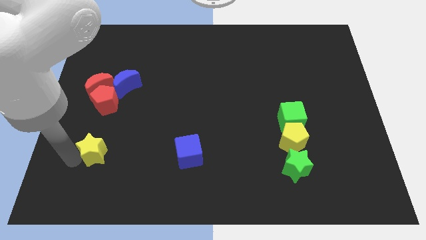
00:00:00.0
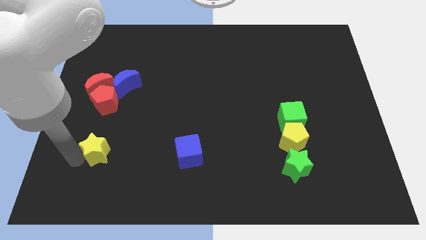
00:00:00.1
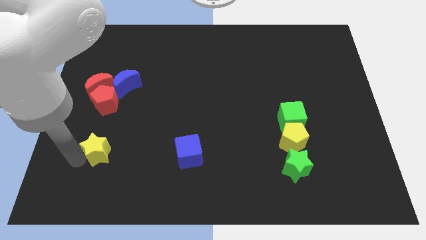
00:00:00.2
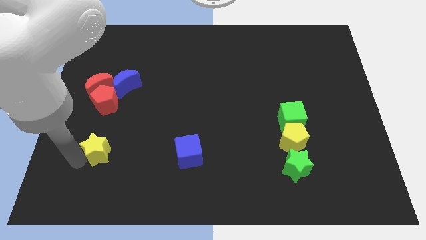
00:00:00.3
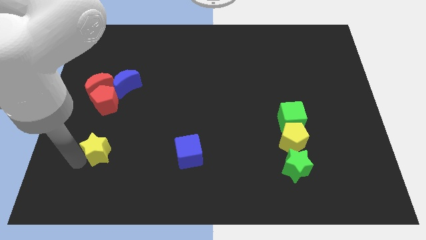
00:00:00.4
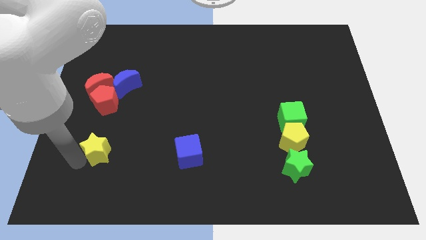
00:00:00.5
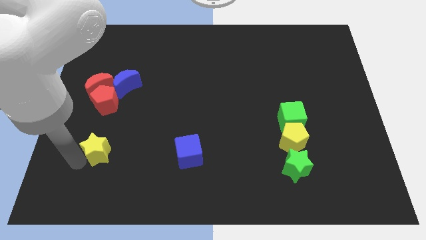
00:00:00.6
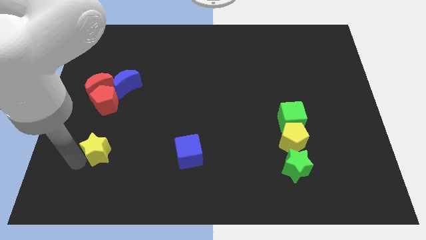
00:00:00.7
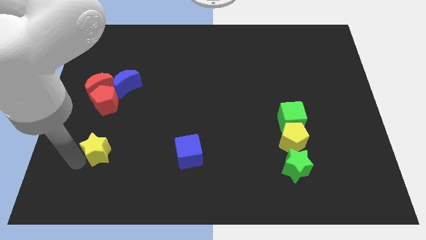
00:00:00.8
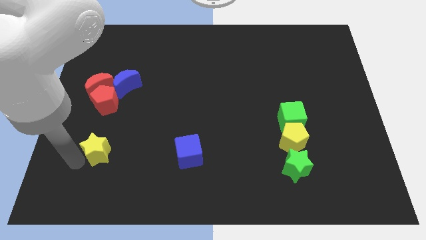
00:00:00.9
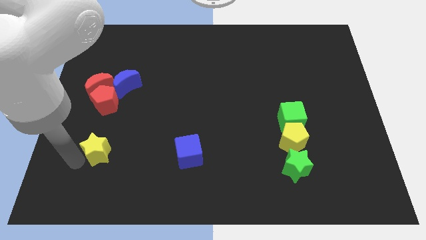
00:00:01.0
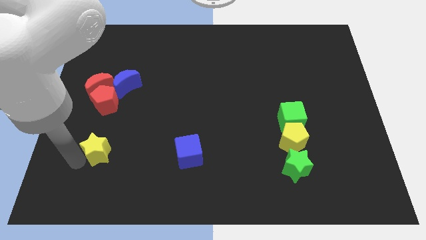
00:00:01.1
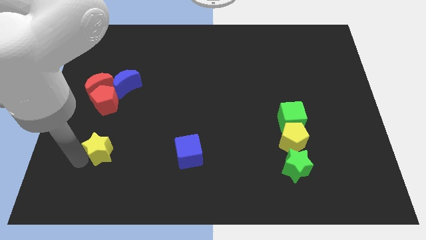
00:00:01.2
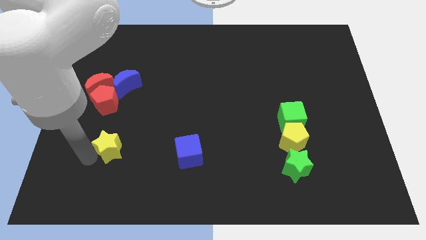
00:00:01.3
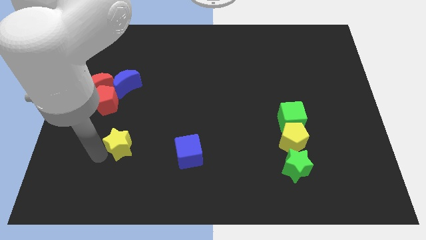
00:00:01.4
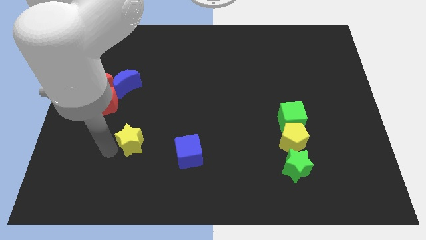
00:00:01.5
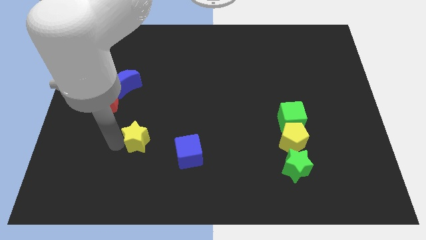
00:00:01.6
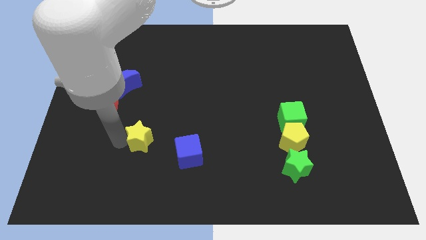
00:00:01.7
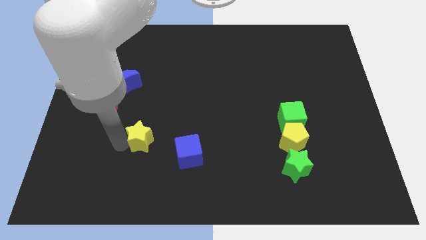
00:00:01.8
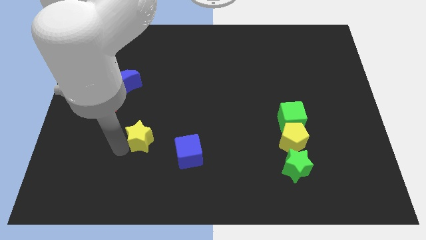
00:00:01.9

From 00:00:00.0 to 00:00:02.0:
move the yellow star towards the top right

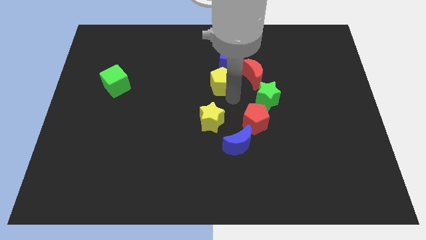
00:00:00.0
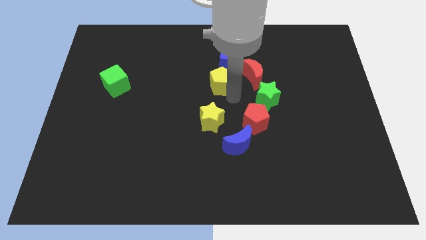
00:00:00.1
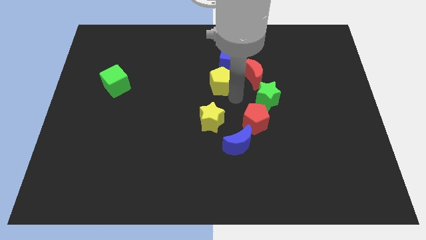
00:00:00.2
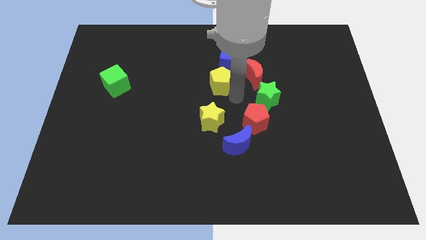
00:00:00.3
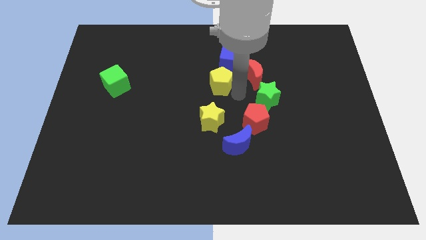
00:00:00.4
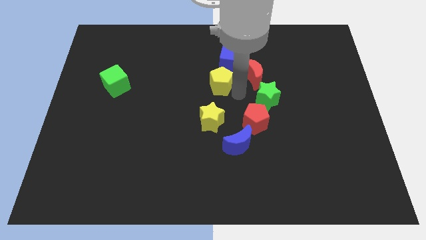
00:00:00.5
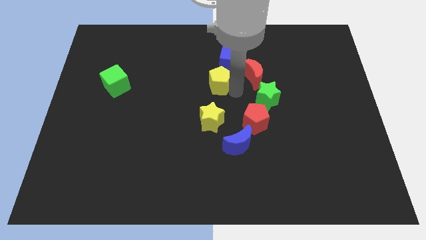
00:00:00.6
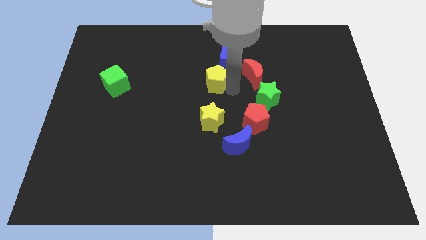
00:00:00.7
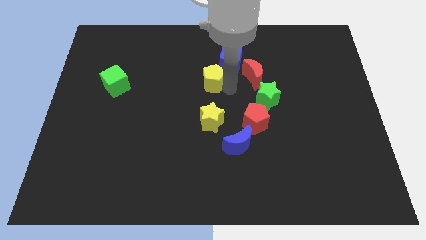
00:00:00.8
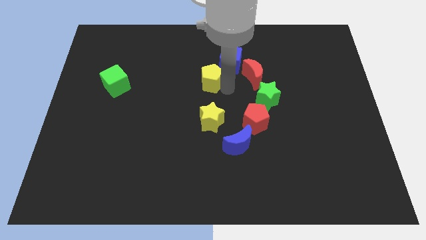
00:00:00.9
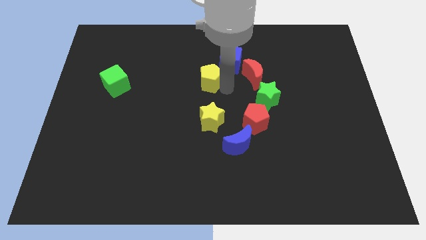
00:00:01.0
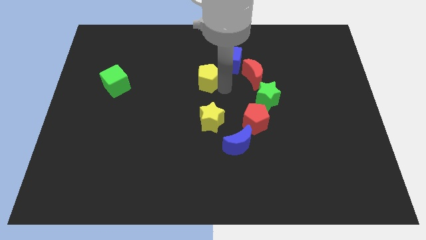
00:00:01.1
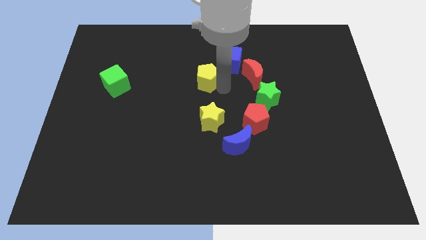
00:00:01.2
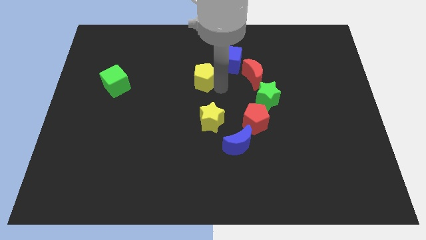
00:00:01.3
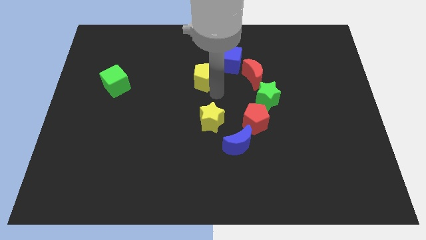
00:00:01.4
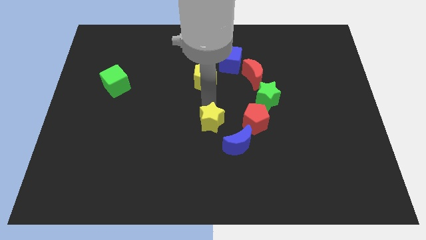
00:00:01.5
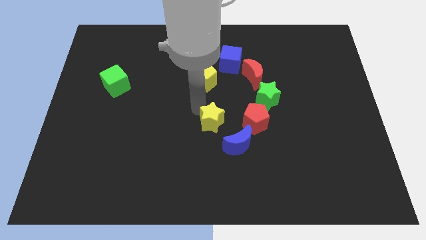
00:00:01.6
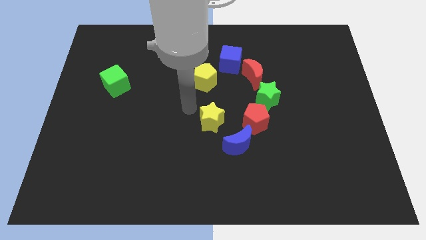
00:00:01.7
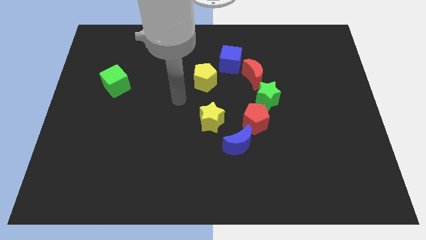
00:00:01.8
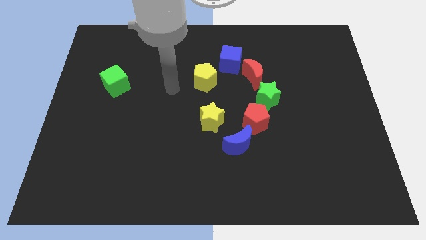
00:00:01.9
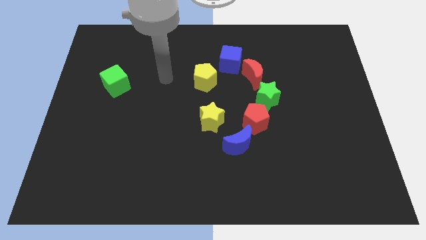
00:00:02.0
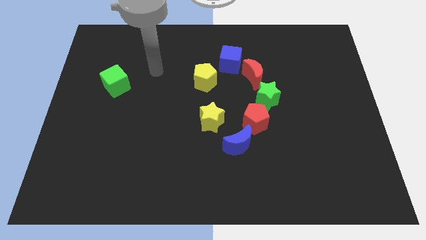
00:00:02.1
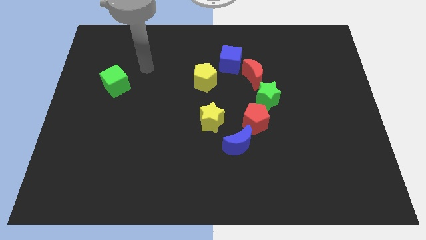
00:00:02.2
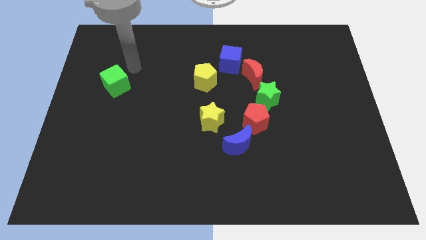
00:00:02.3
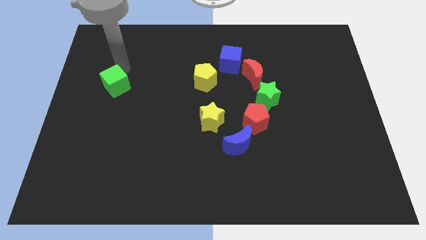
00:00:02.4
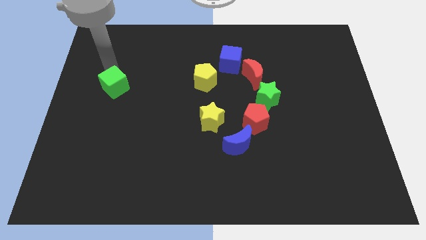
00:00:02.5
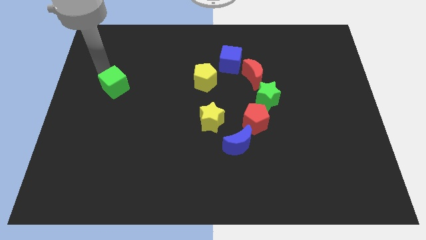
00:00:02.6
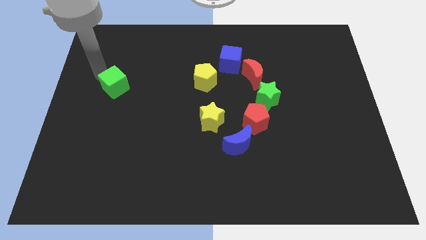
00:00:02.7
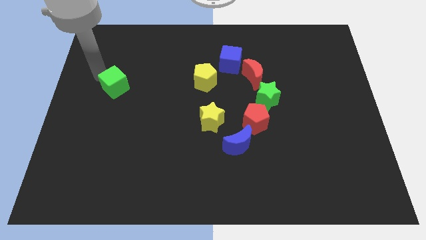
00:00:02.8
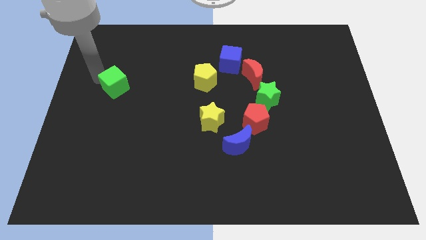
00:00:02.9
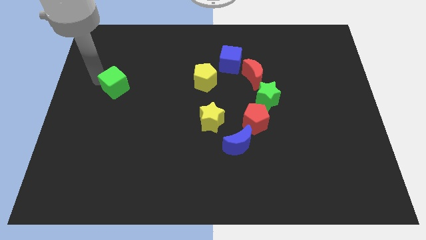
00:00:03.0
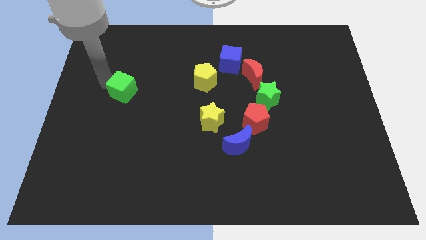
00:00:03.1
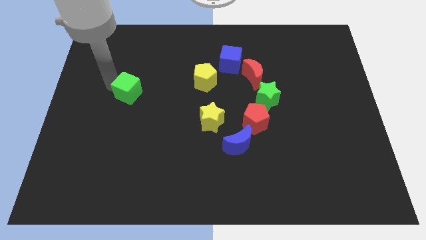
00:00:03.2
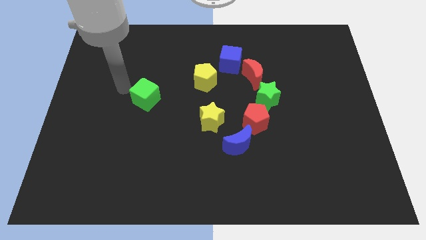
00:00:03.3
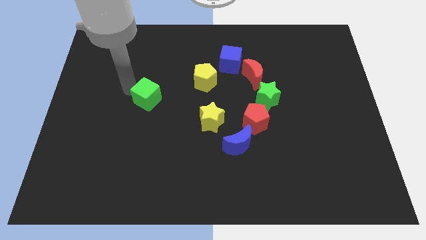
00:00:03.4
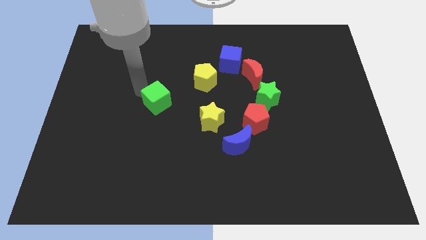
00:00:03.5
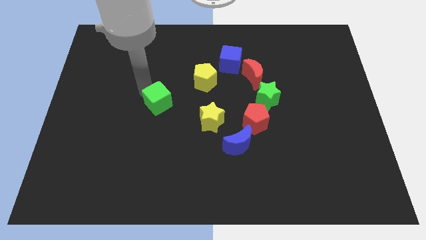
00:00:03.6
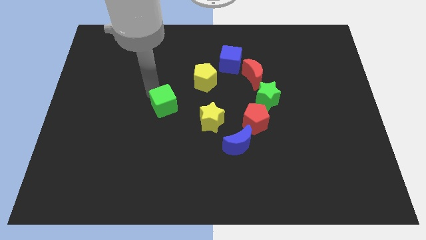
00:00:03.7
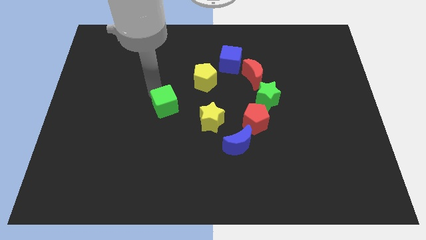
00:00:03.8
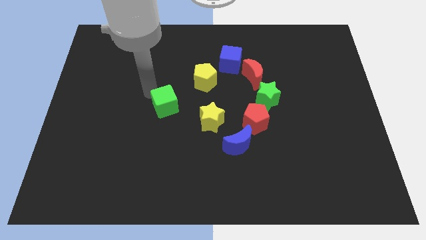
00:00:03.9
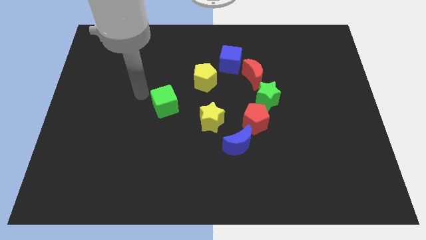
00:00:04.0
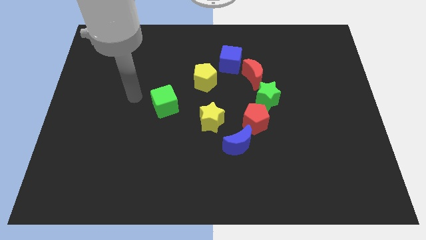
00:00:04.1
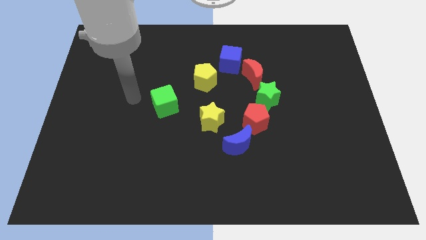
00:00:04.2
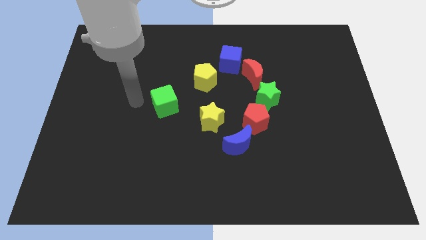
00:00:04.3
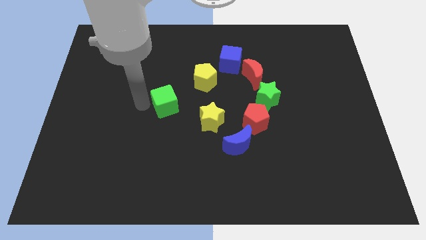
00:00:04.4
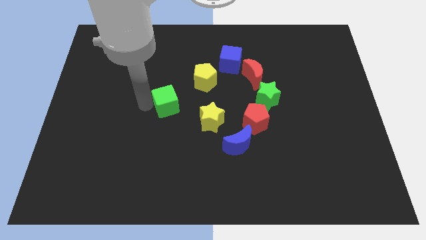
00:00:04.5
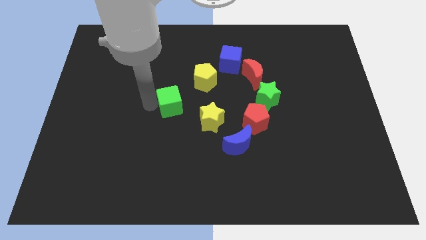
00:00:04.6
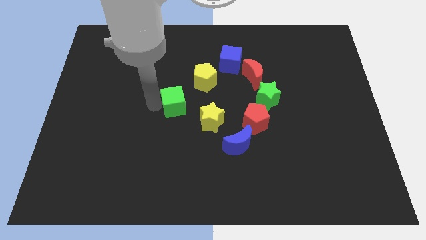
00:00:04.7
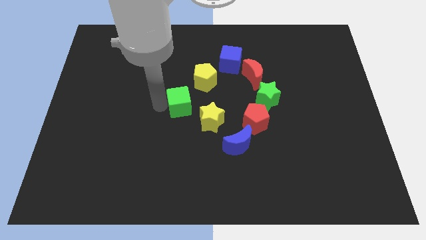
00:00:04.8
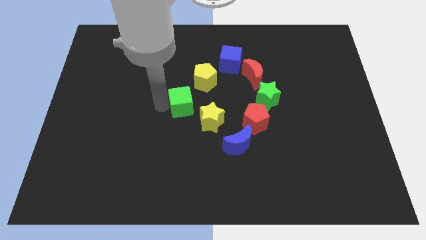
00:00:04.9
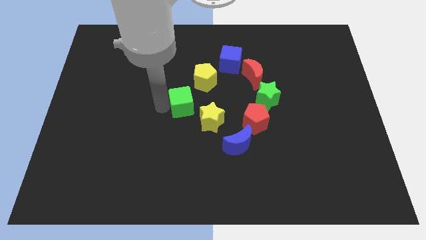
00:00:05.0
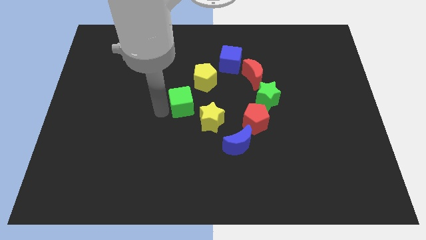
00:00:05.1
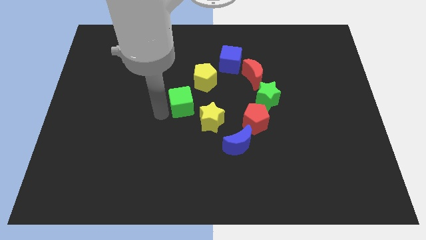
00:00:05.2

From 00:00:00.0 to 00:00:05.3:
move the green cube towards the center

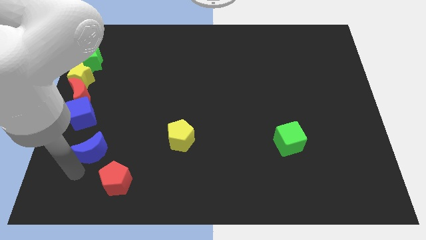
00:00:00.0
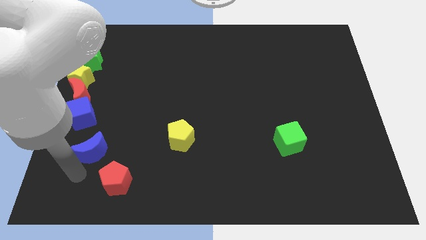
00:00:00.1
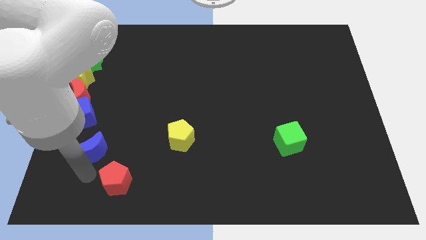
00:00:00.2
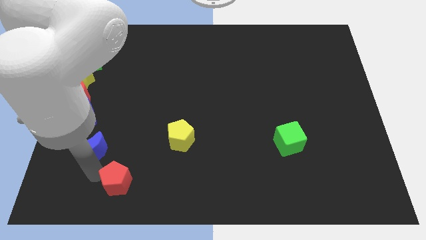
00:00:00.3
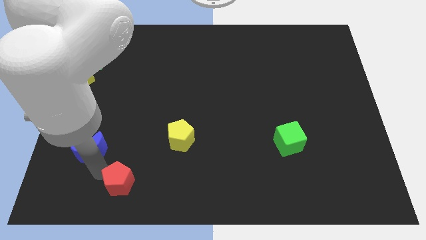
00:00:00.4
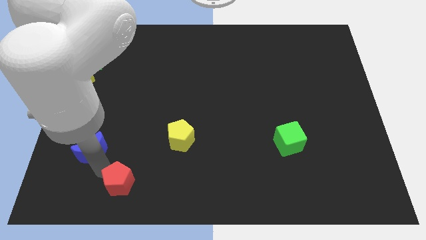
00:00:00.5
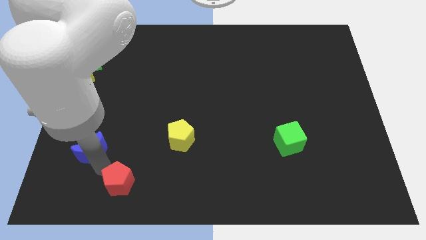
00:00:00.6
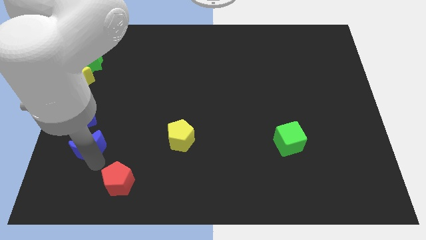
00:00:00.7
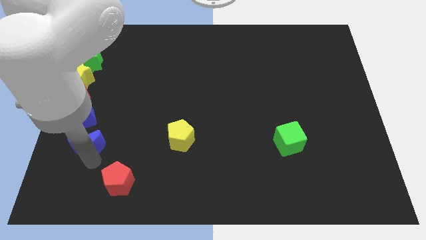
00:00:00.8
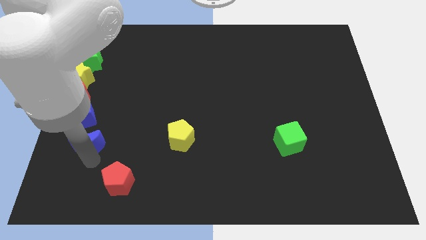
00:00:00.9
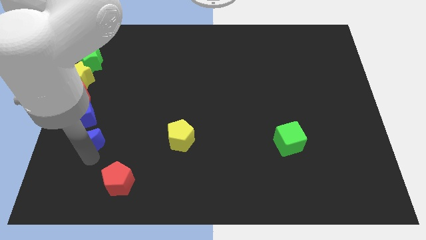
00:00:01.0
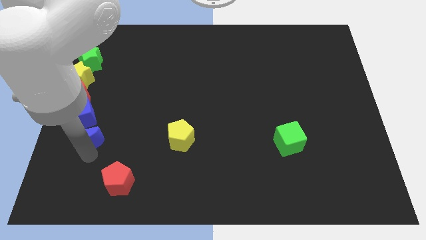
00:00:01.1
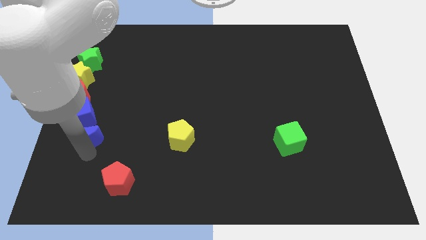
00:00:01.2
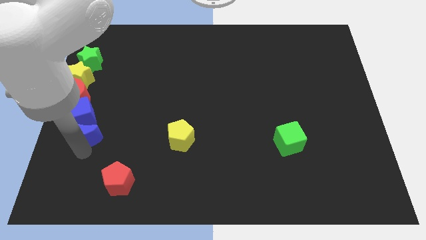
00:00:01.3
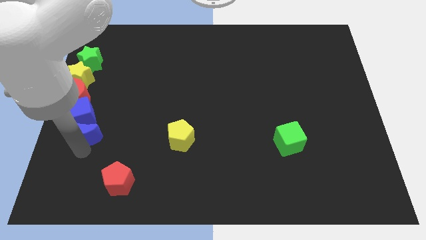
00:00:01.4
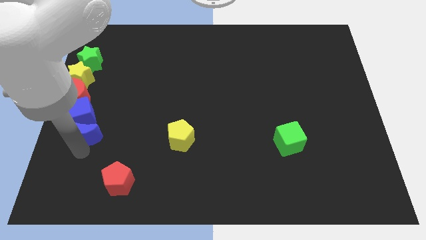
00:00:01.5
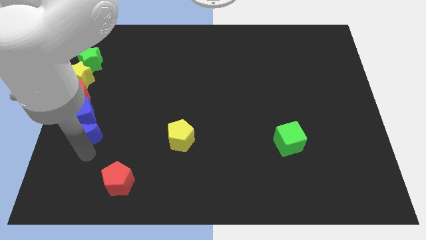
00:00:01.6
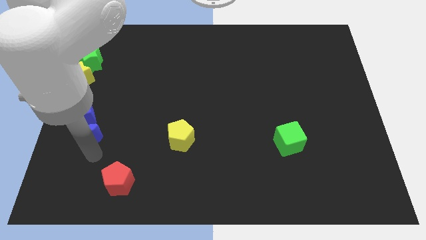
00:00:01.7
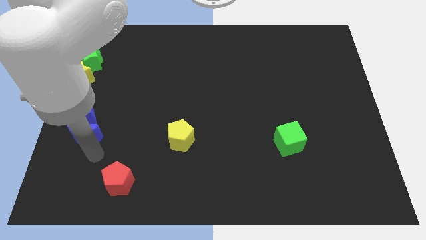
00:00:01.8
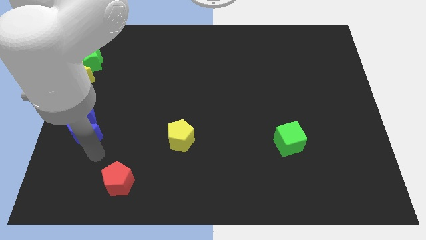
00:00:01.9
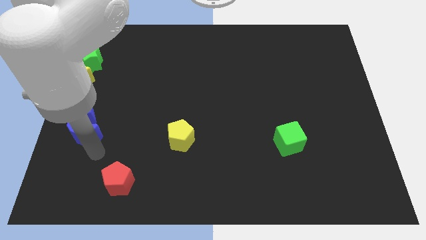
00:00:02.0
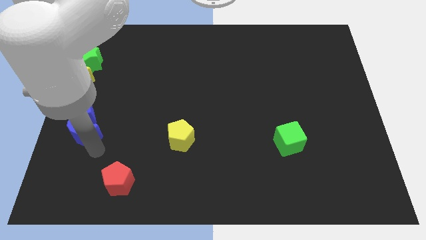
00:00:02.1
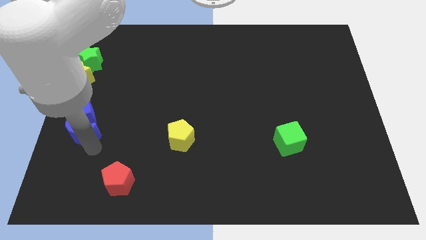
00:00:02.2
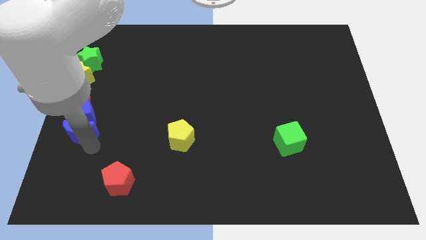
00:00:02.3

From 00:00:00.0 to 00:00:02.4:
push blue crescent below blue cube
